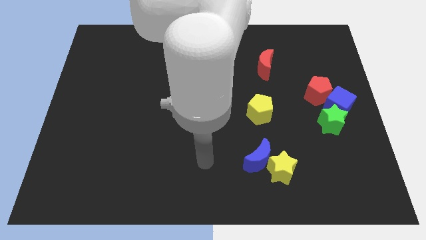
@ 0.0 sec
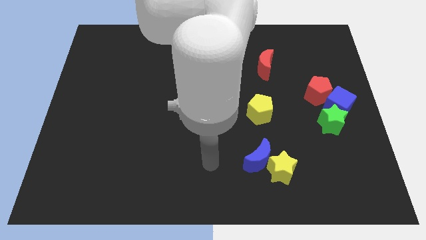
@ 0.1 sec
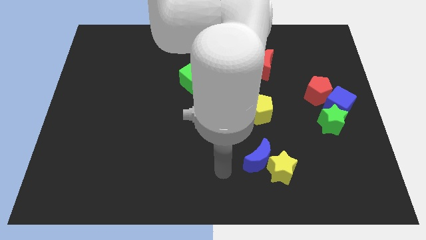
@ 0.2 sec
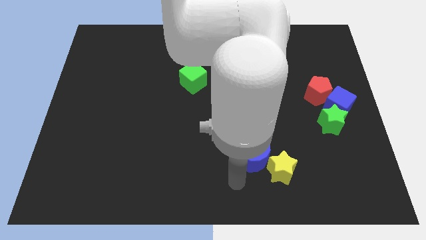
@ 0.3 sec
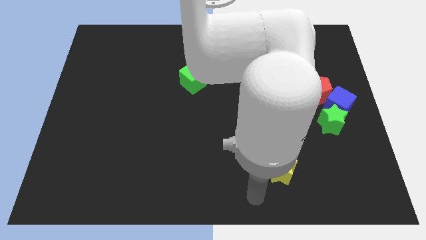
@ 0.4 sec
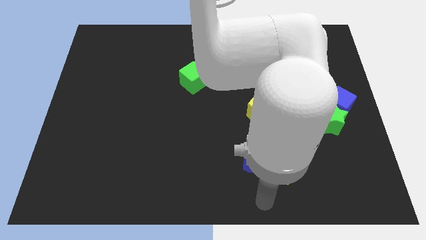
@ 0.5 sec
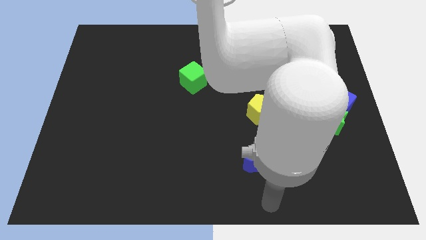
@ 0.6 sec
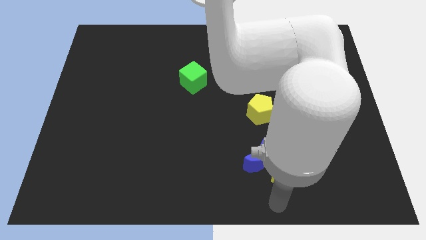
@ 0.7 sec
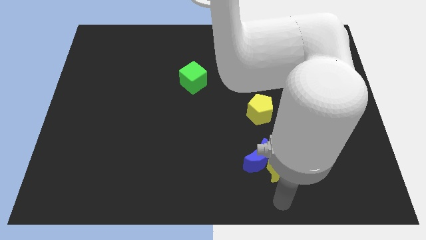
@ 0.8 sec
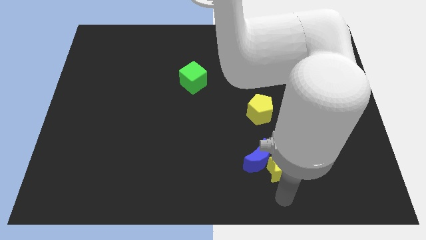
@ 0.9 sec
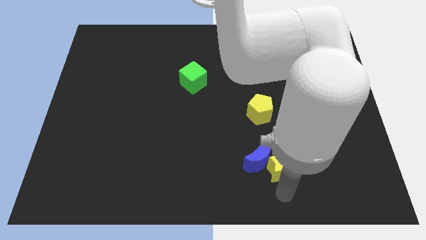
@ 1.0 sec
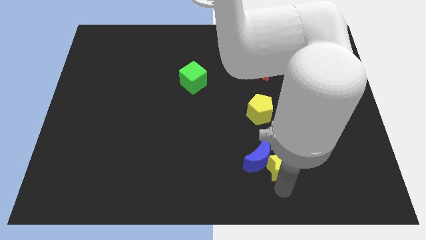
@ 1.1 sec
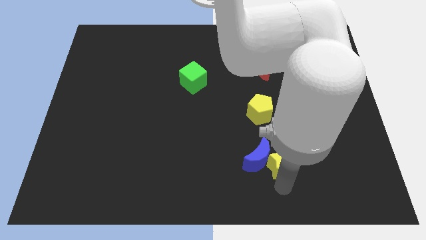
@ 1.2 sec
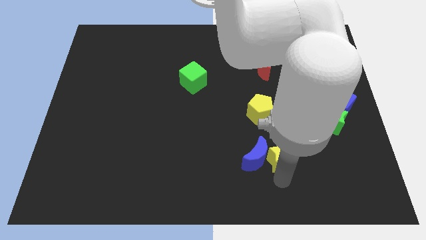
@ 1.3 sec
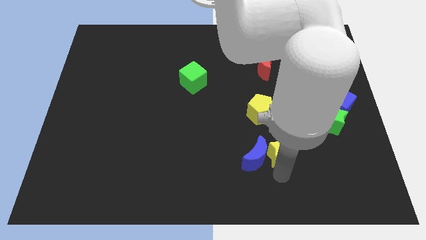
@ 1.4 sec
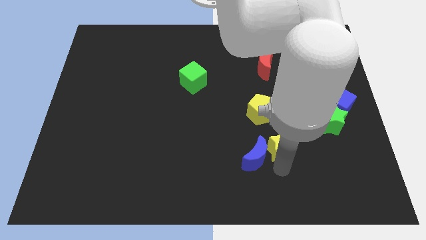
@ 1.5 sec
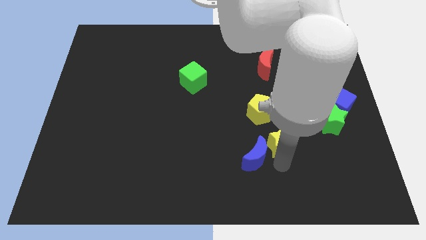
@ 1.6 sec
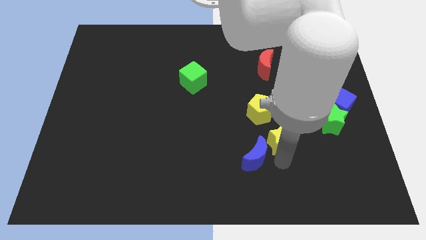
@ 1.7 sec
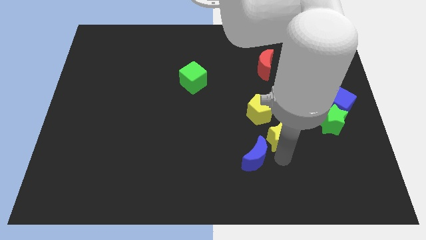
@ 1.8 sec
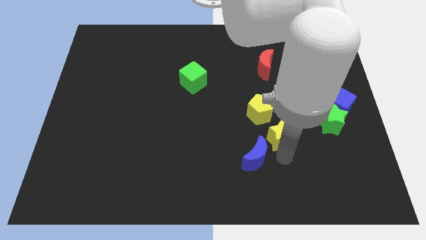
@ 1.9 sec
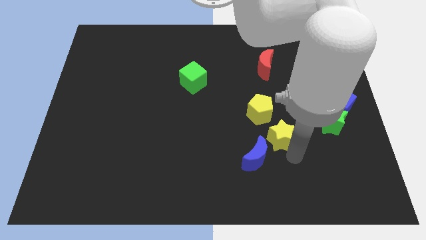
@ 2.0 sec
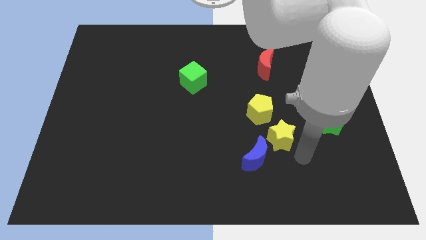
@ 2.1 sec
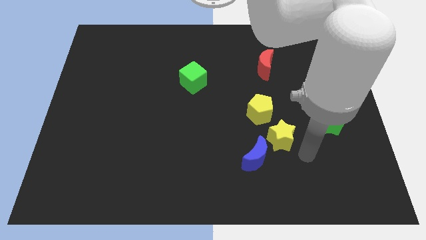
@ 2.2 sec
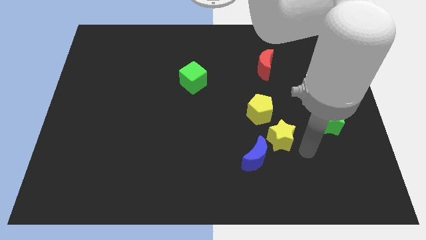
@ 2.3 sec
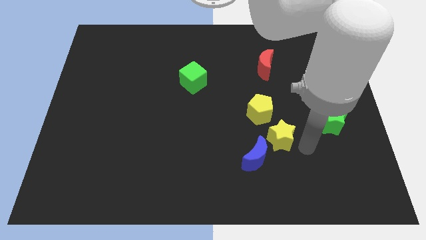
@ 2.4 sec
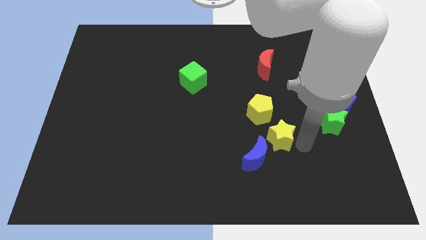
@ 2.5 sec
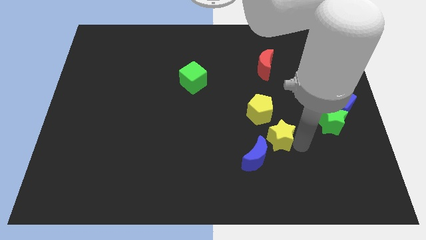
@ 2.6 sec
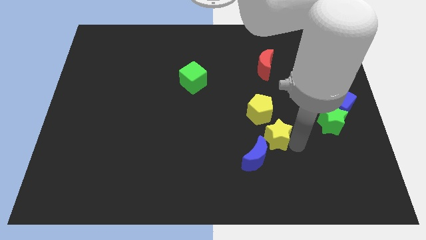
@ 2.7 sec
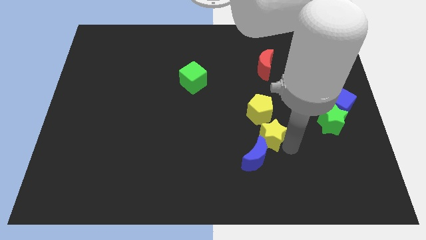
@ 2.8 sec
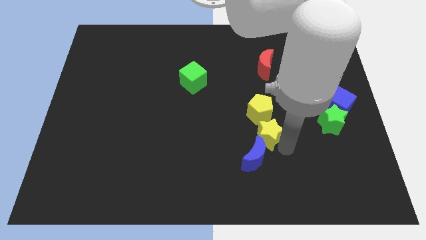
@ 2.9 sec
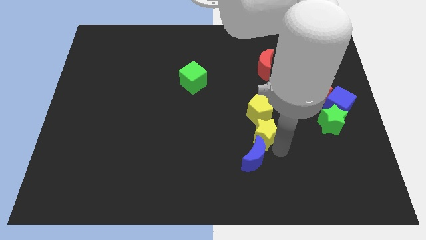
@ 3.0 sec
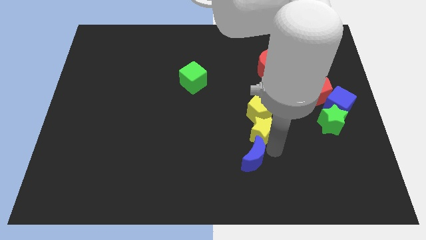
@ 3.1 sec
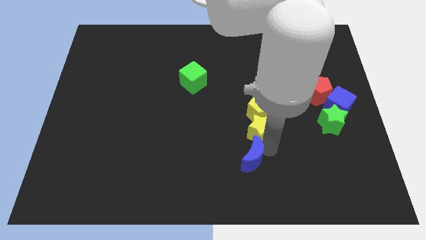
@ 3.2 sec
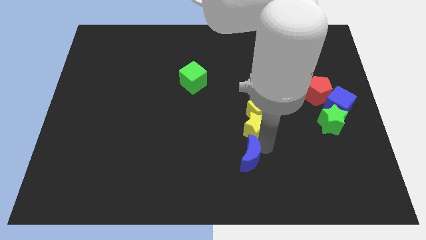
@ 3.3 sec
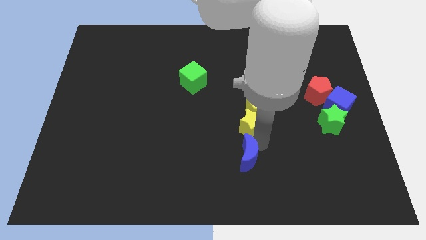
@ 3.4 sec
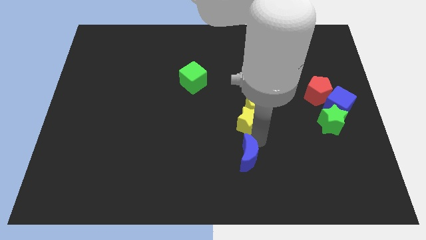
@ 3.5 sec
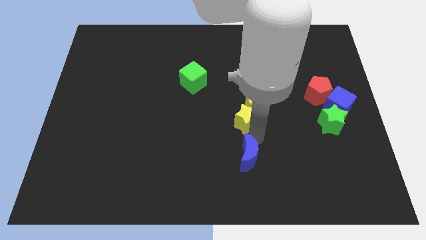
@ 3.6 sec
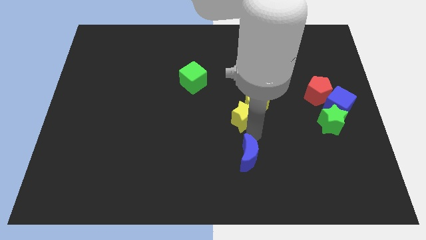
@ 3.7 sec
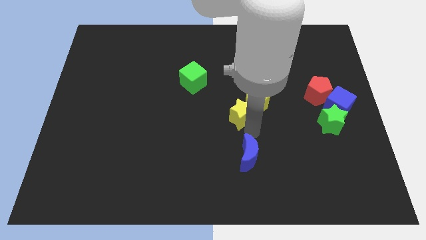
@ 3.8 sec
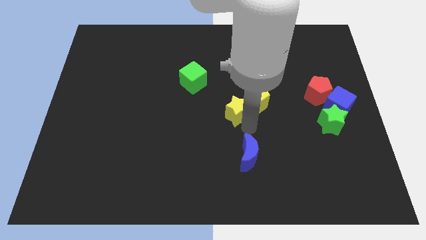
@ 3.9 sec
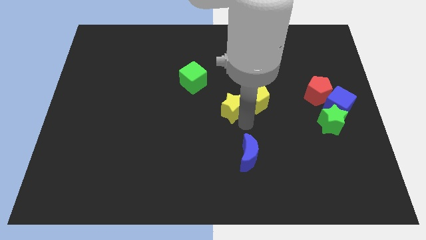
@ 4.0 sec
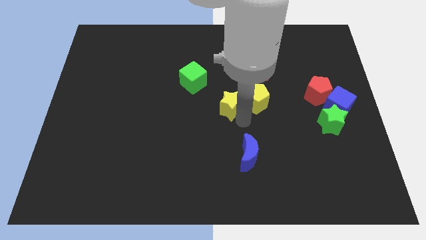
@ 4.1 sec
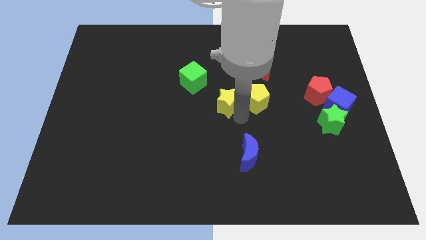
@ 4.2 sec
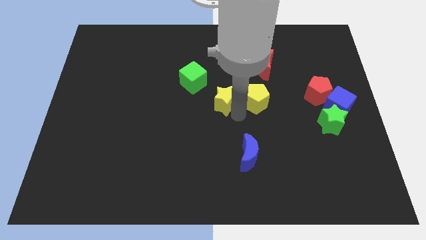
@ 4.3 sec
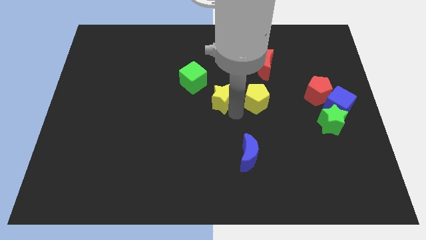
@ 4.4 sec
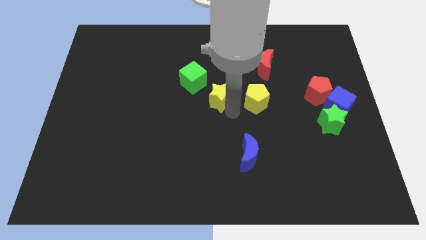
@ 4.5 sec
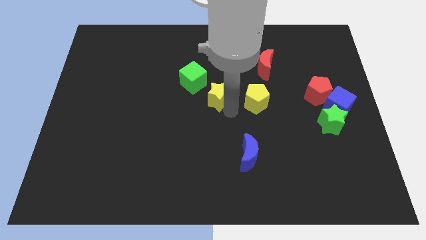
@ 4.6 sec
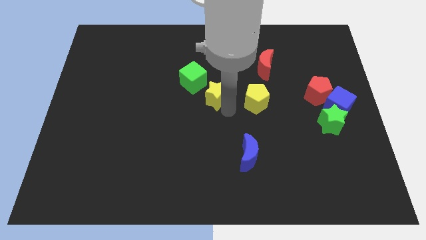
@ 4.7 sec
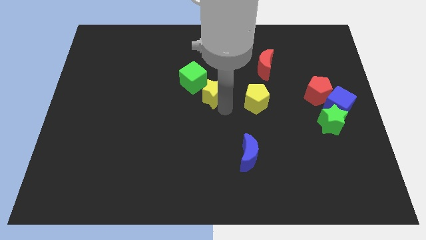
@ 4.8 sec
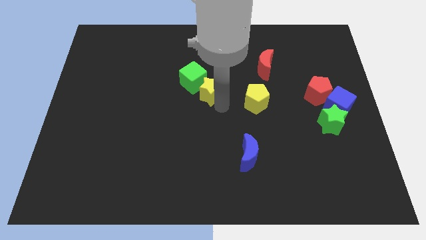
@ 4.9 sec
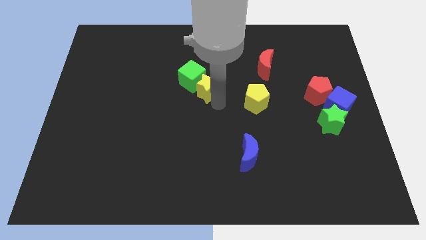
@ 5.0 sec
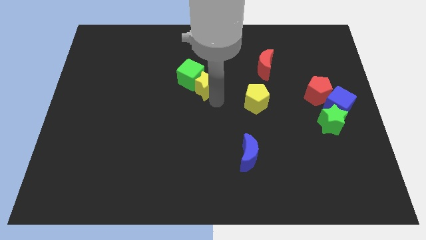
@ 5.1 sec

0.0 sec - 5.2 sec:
move the yellow star close to the green cube

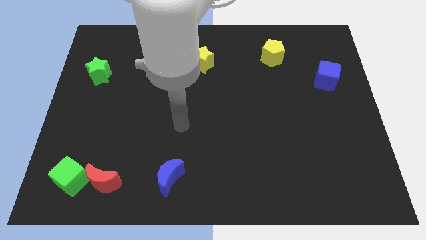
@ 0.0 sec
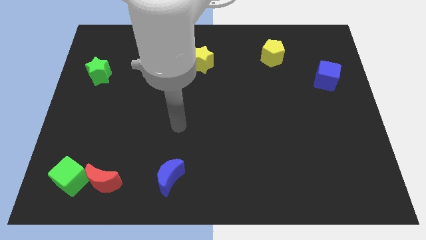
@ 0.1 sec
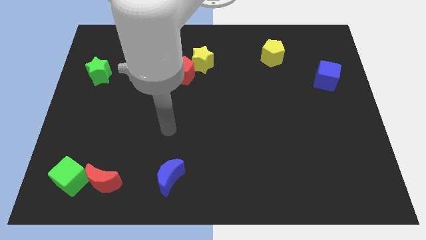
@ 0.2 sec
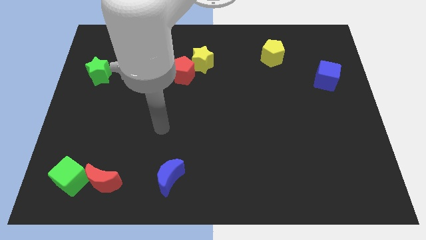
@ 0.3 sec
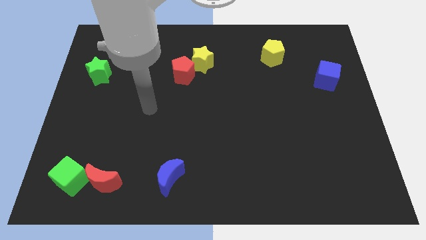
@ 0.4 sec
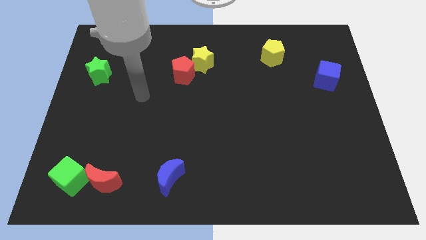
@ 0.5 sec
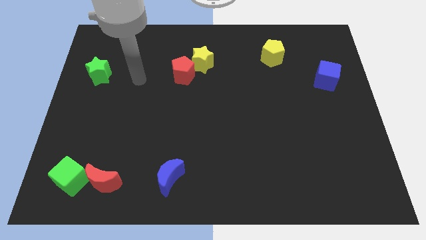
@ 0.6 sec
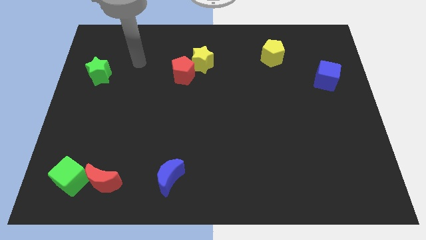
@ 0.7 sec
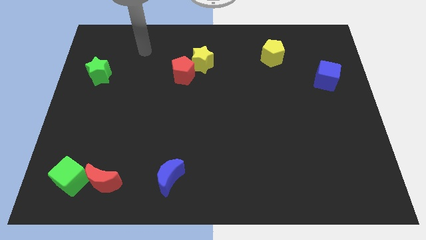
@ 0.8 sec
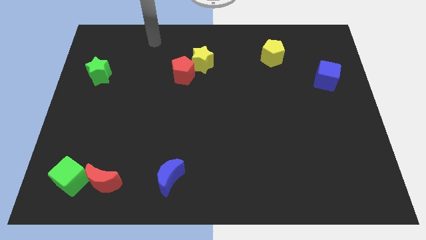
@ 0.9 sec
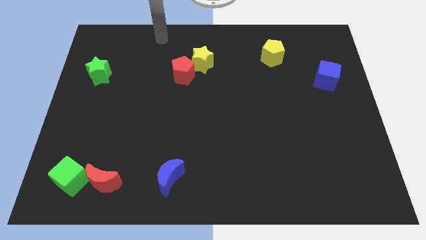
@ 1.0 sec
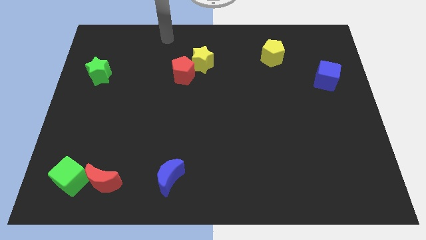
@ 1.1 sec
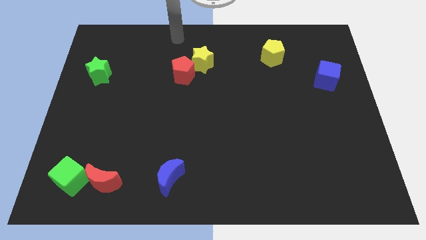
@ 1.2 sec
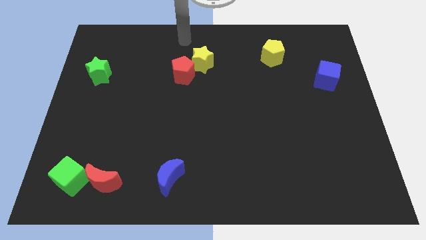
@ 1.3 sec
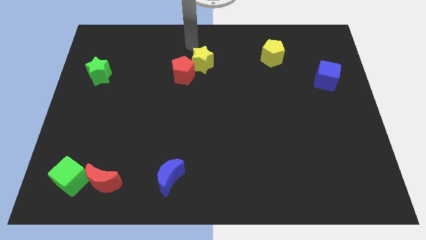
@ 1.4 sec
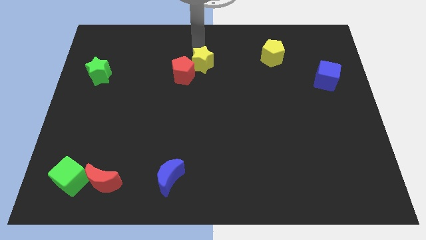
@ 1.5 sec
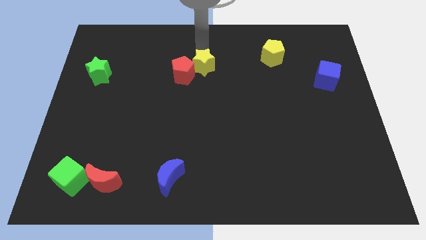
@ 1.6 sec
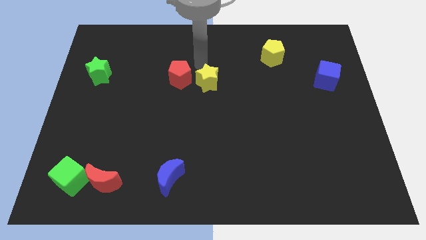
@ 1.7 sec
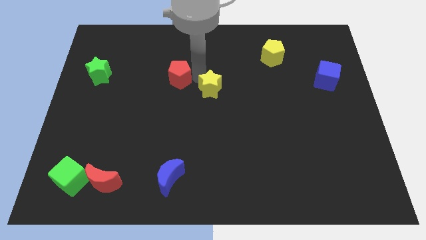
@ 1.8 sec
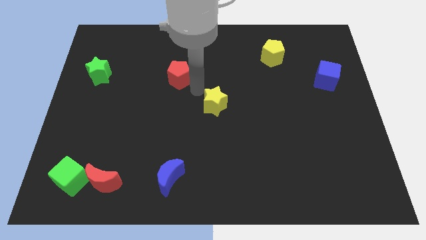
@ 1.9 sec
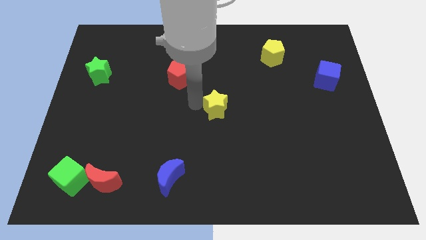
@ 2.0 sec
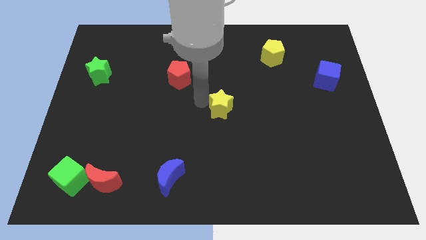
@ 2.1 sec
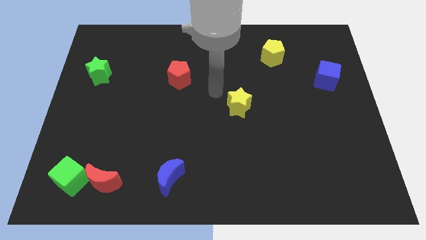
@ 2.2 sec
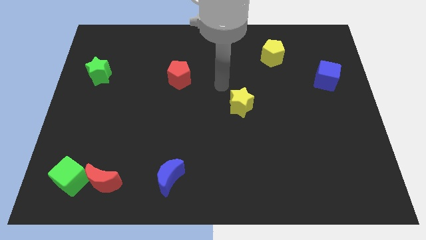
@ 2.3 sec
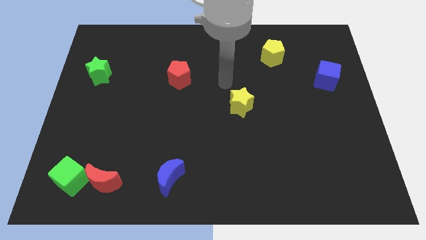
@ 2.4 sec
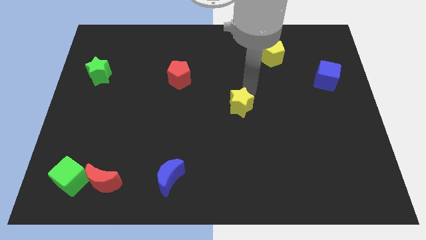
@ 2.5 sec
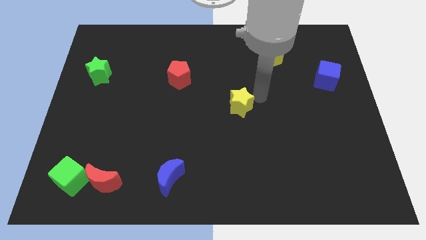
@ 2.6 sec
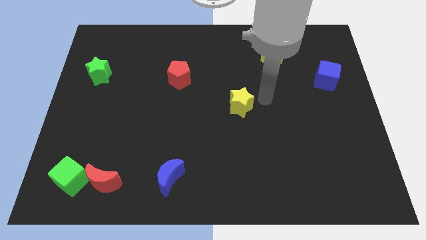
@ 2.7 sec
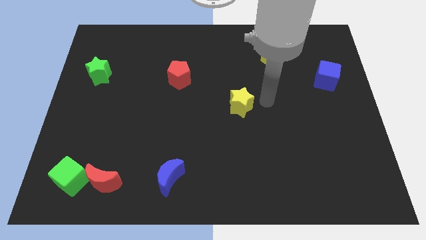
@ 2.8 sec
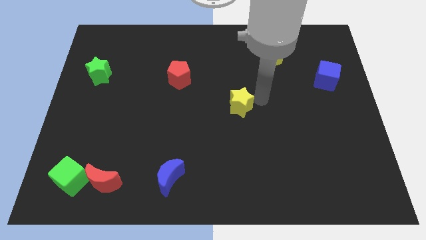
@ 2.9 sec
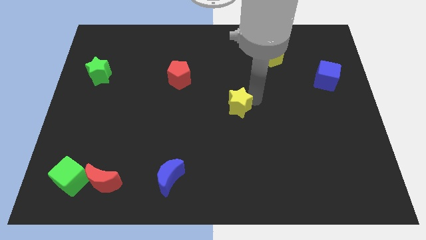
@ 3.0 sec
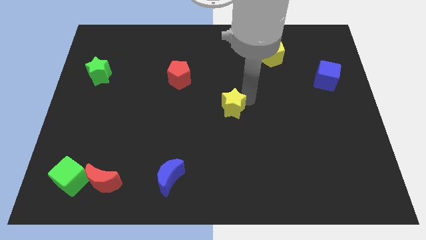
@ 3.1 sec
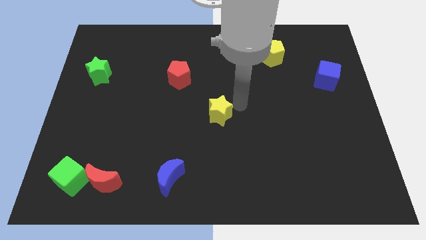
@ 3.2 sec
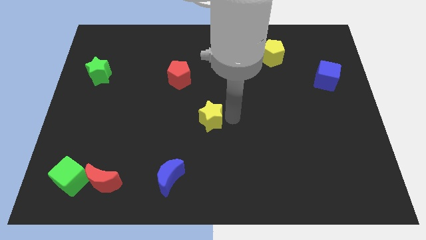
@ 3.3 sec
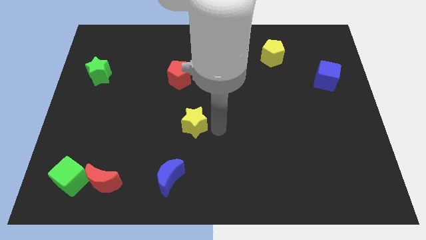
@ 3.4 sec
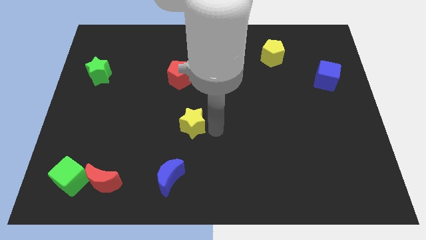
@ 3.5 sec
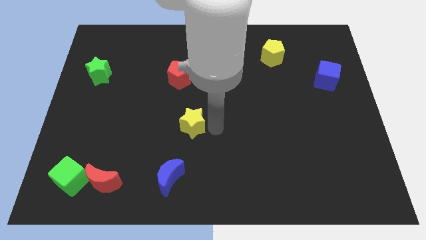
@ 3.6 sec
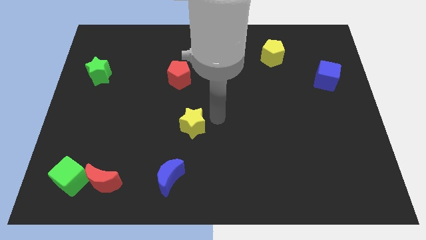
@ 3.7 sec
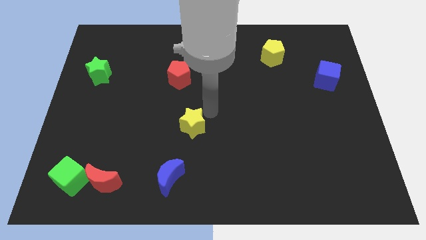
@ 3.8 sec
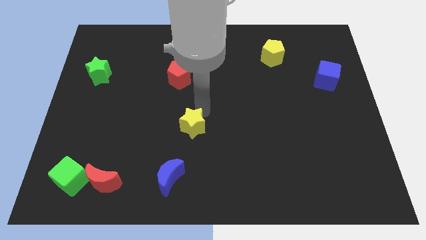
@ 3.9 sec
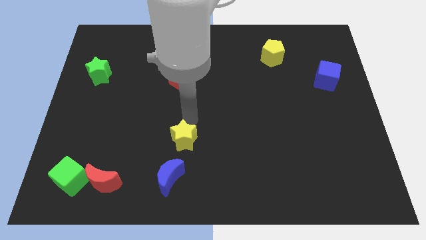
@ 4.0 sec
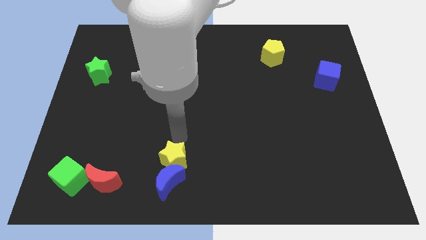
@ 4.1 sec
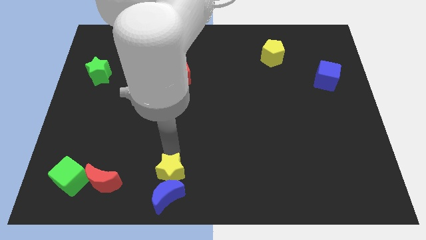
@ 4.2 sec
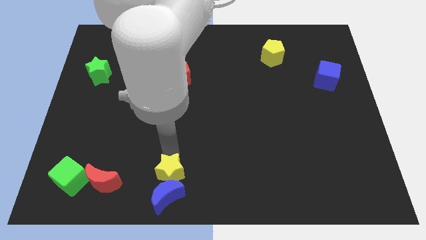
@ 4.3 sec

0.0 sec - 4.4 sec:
put the yellow star close to the blue moon
